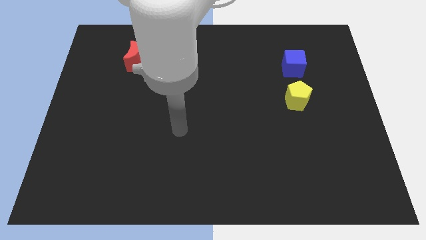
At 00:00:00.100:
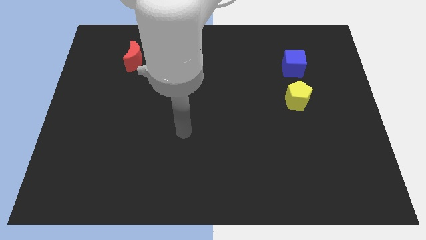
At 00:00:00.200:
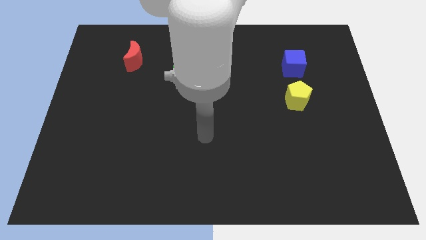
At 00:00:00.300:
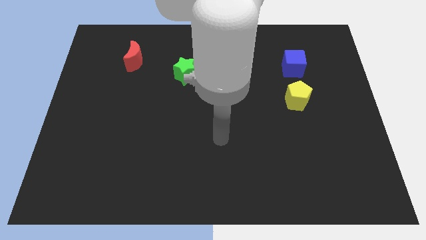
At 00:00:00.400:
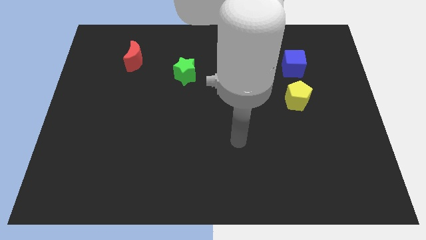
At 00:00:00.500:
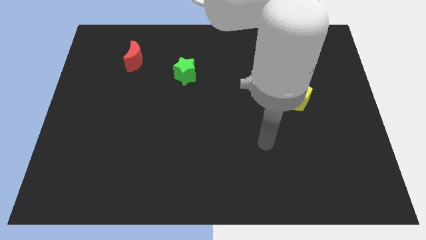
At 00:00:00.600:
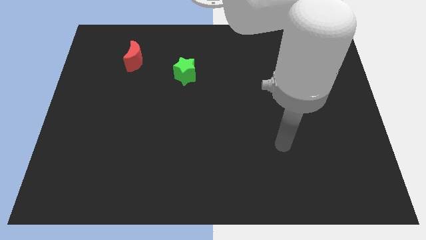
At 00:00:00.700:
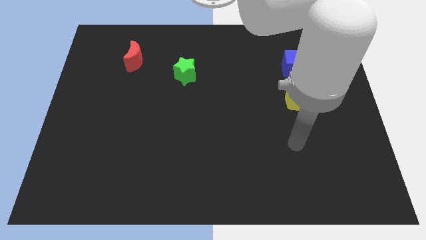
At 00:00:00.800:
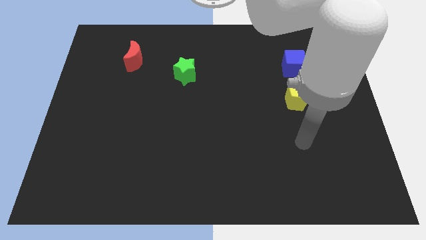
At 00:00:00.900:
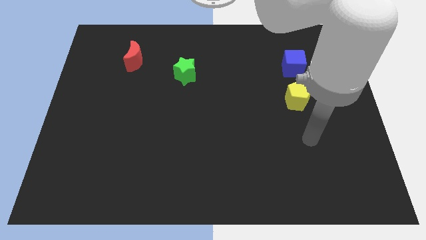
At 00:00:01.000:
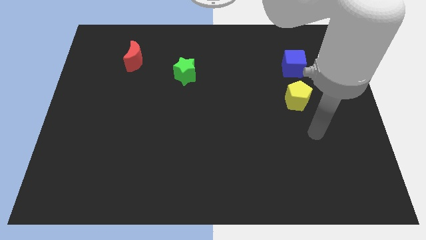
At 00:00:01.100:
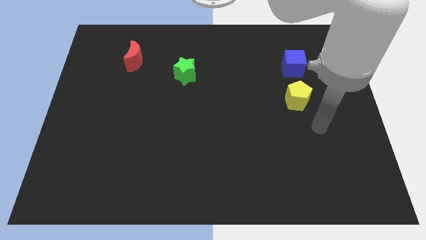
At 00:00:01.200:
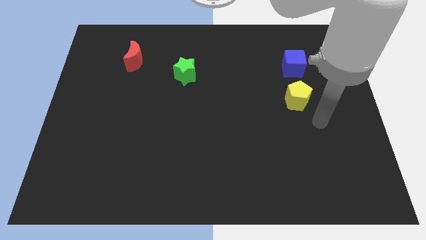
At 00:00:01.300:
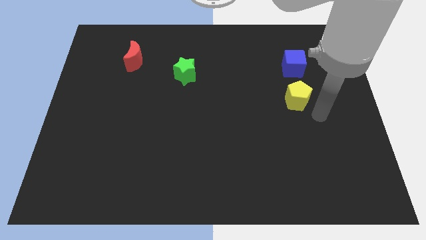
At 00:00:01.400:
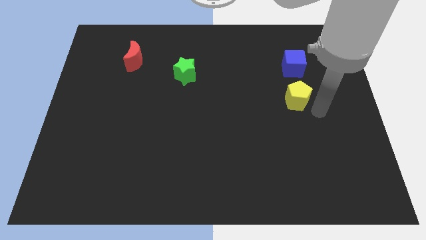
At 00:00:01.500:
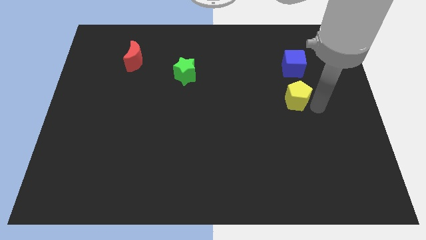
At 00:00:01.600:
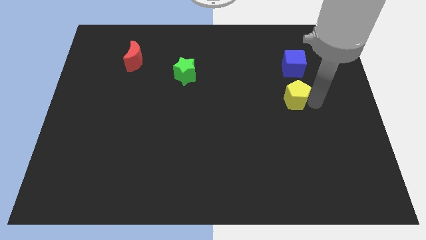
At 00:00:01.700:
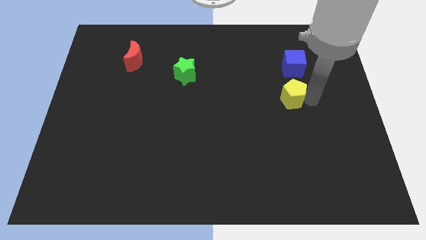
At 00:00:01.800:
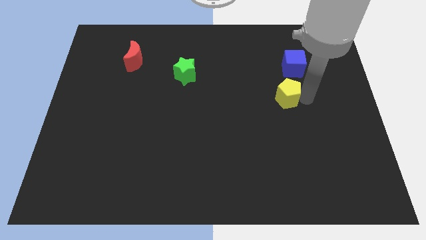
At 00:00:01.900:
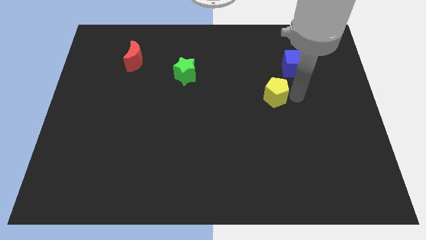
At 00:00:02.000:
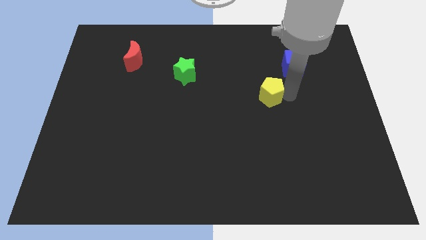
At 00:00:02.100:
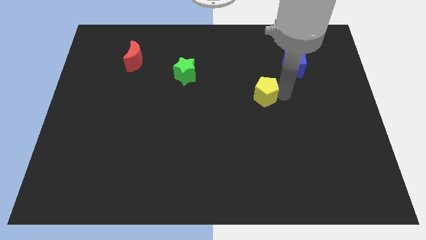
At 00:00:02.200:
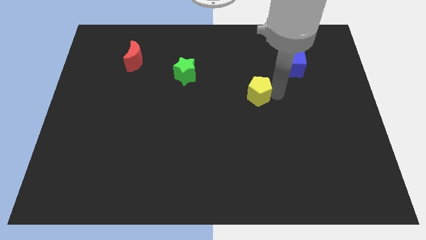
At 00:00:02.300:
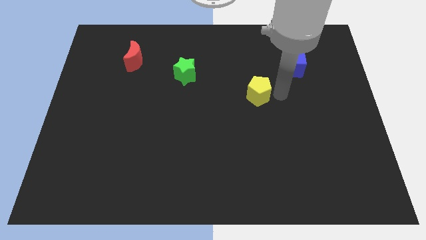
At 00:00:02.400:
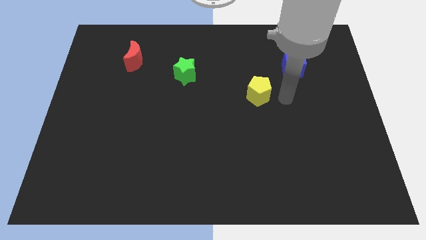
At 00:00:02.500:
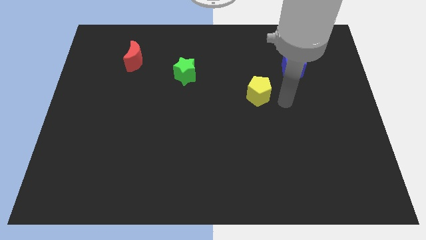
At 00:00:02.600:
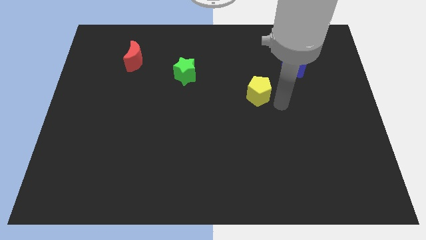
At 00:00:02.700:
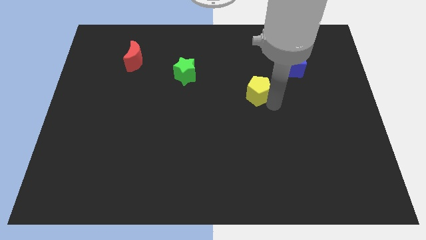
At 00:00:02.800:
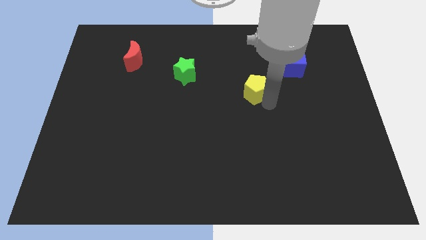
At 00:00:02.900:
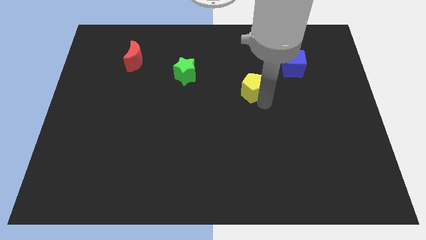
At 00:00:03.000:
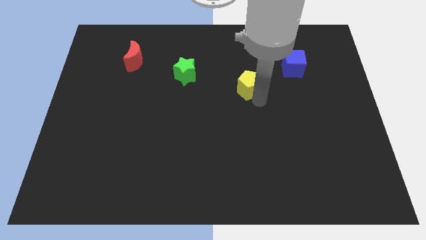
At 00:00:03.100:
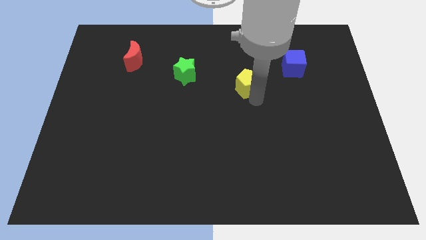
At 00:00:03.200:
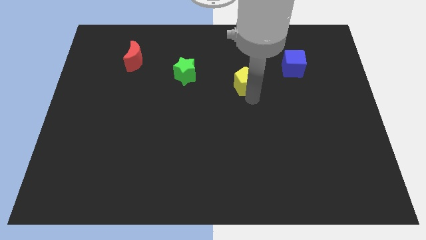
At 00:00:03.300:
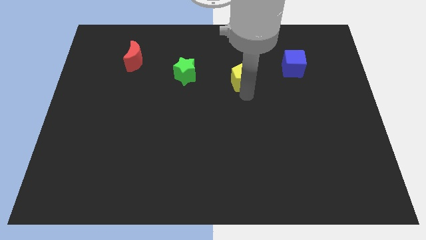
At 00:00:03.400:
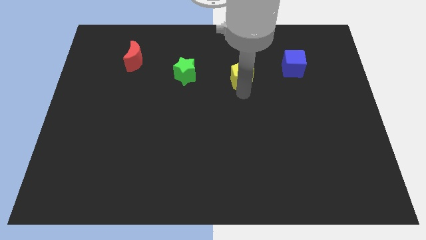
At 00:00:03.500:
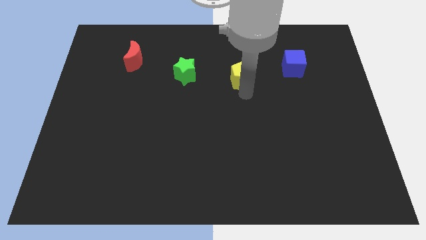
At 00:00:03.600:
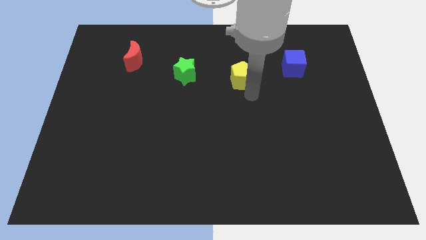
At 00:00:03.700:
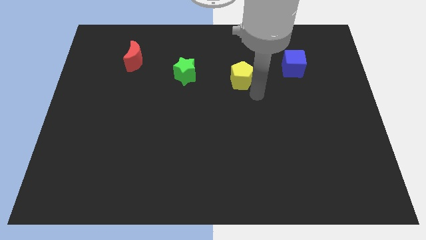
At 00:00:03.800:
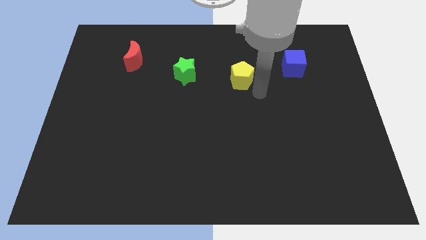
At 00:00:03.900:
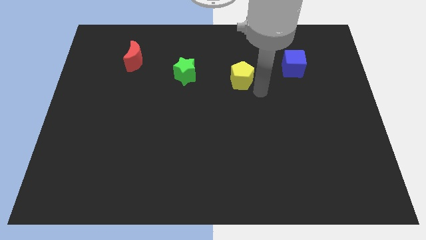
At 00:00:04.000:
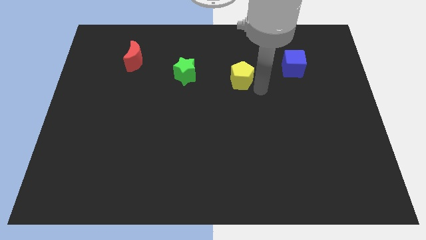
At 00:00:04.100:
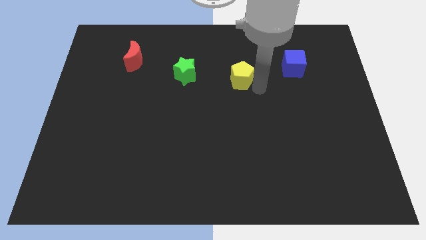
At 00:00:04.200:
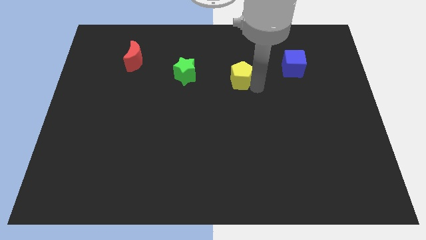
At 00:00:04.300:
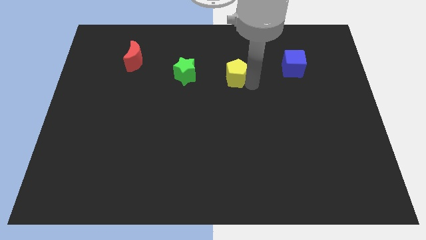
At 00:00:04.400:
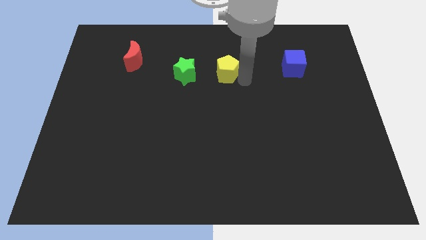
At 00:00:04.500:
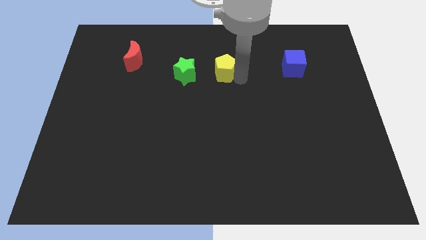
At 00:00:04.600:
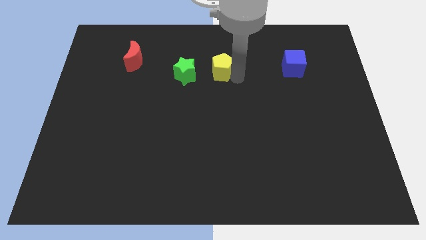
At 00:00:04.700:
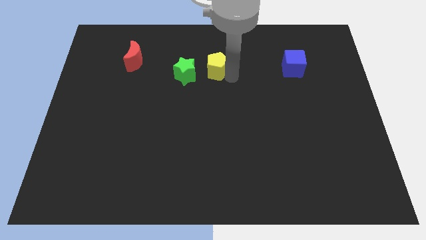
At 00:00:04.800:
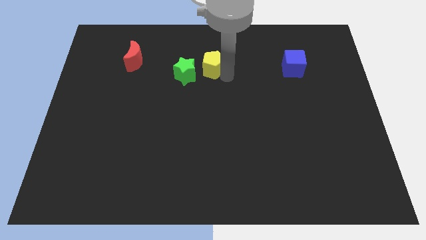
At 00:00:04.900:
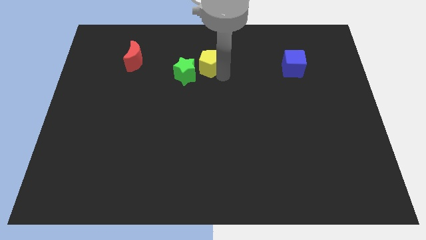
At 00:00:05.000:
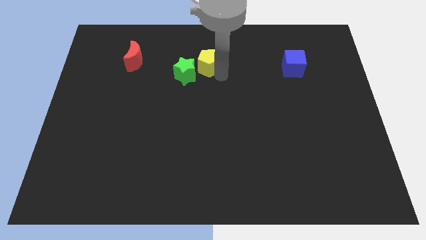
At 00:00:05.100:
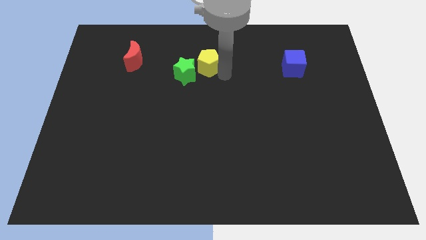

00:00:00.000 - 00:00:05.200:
push the pentagon to the green star

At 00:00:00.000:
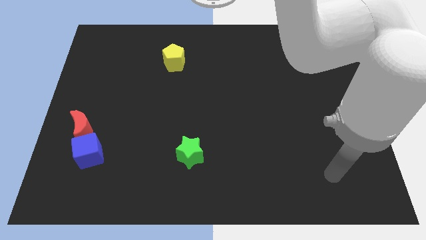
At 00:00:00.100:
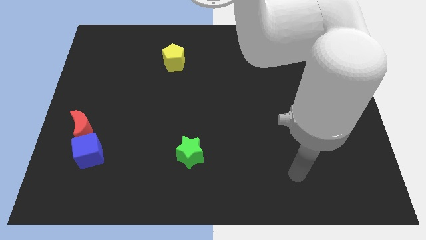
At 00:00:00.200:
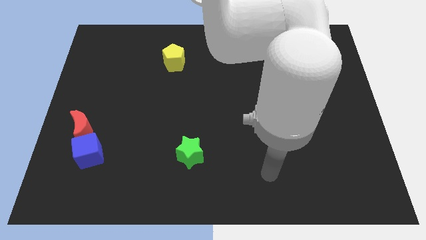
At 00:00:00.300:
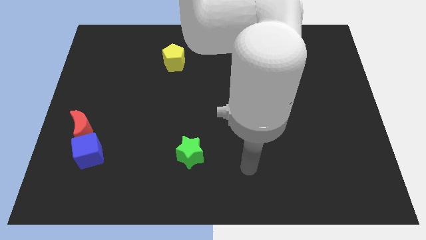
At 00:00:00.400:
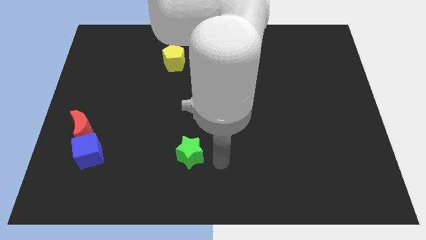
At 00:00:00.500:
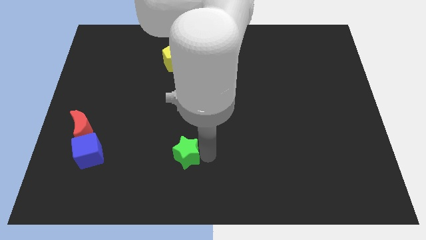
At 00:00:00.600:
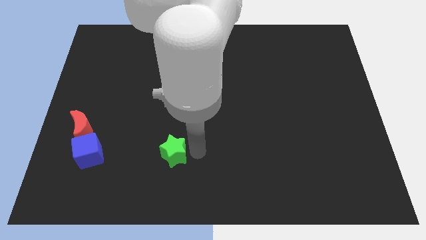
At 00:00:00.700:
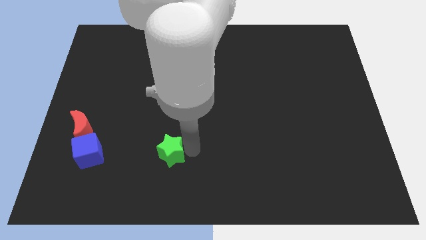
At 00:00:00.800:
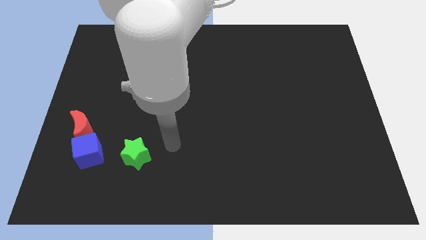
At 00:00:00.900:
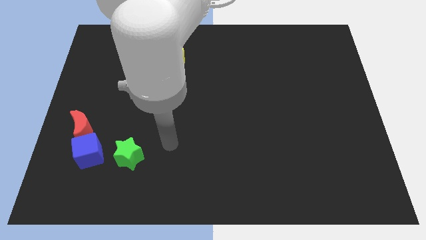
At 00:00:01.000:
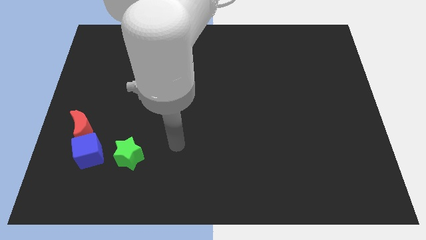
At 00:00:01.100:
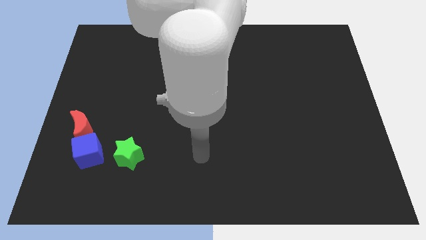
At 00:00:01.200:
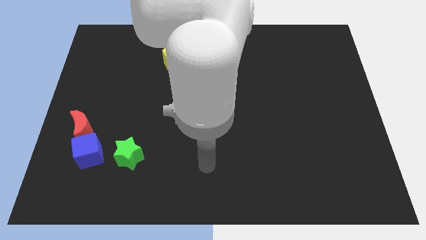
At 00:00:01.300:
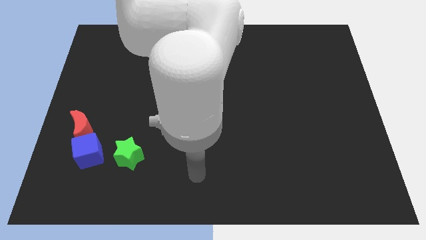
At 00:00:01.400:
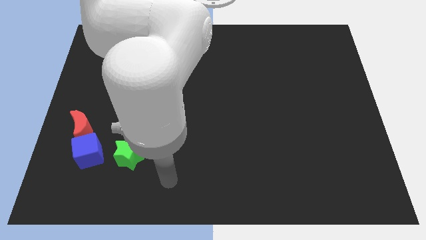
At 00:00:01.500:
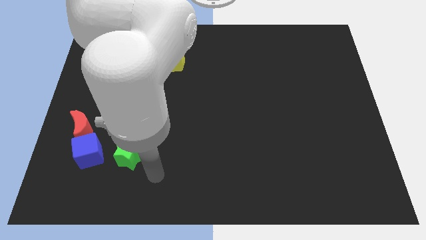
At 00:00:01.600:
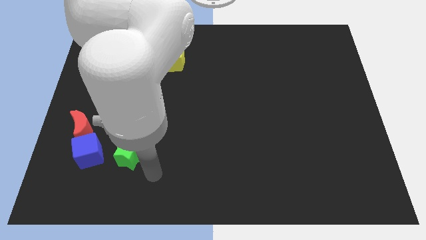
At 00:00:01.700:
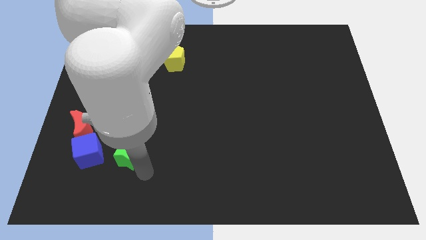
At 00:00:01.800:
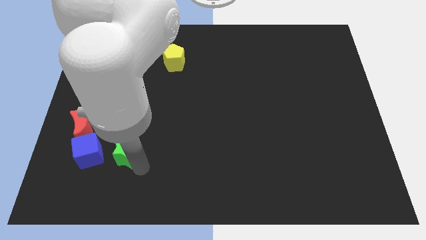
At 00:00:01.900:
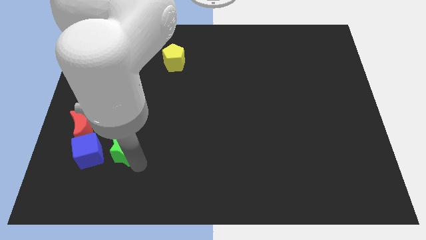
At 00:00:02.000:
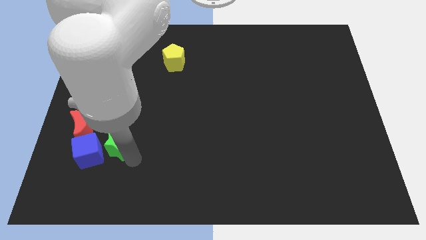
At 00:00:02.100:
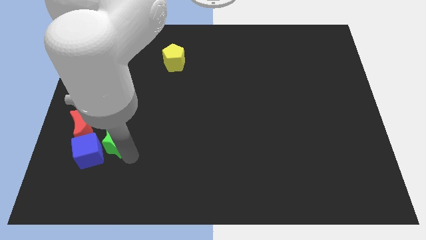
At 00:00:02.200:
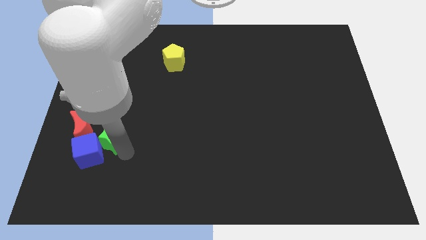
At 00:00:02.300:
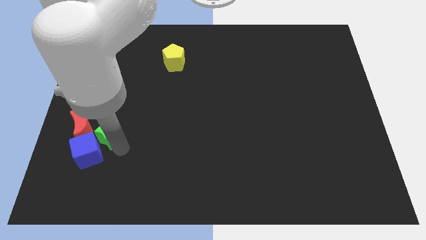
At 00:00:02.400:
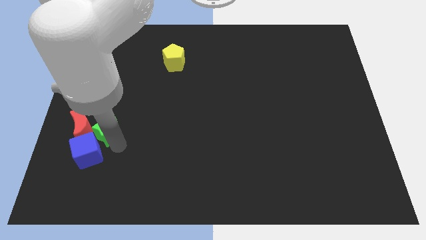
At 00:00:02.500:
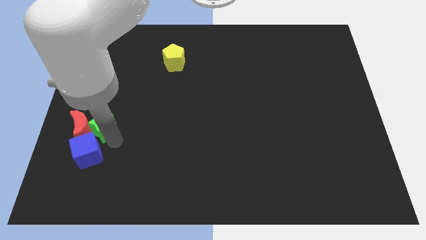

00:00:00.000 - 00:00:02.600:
slide the green star next to the red block

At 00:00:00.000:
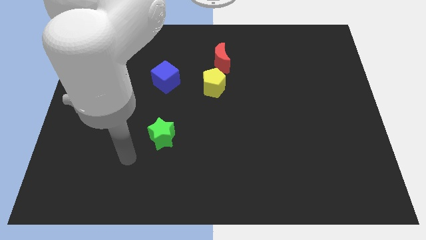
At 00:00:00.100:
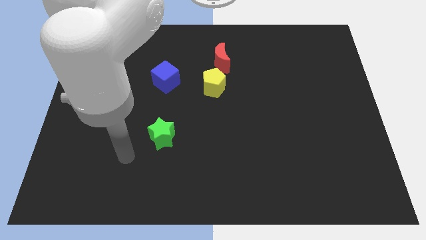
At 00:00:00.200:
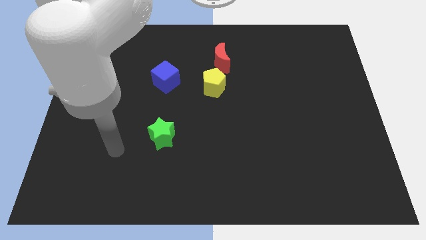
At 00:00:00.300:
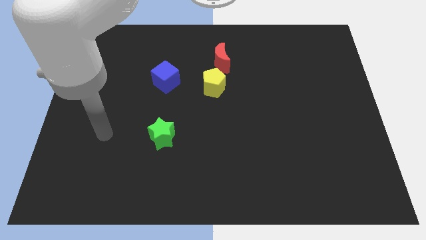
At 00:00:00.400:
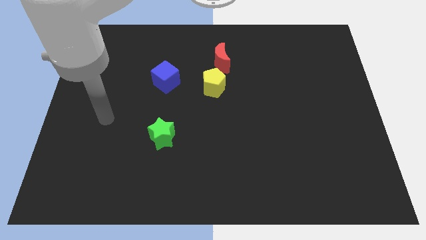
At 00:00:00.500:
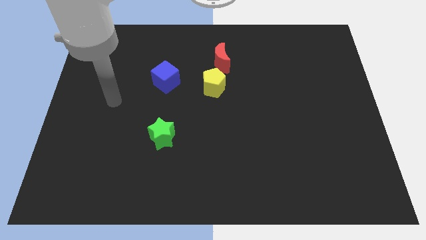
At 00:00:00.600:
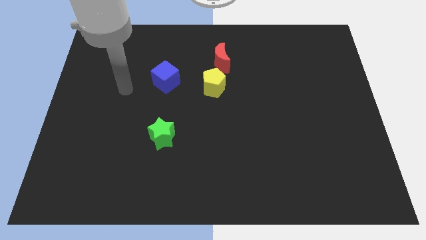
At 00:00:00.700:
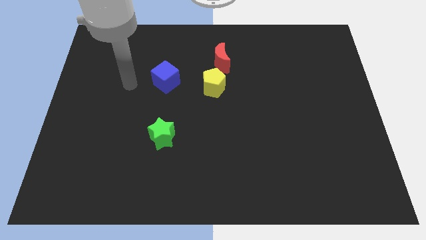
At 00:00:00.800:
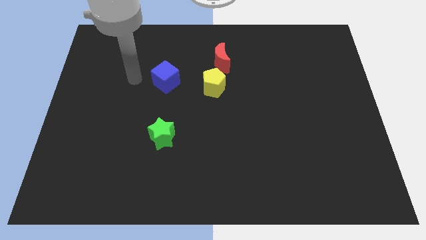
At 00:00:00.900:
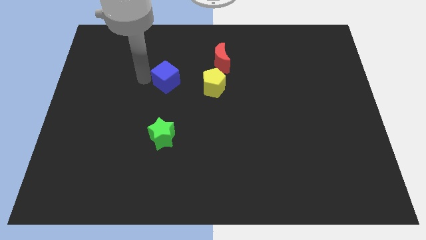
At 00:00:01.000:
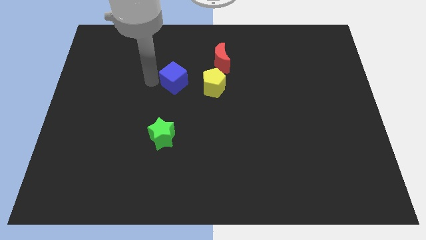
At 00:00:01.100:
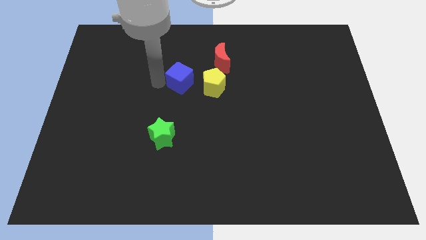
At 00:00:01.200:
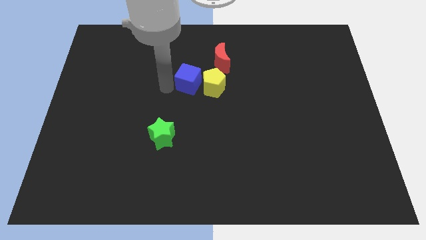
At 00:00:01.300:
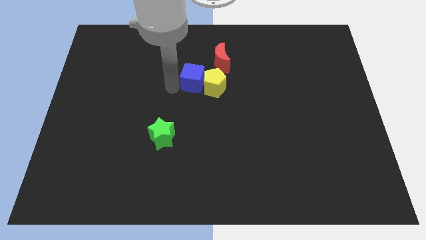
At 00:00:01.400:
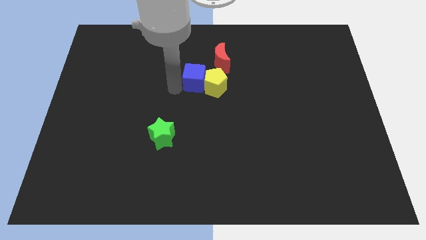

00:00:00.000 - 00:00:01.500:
slide the blue cube towards the yellow block
